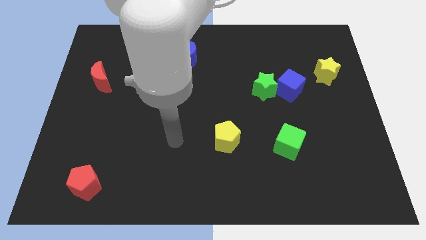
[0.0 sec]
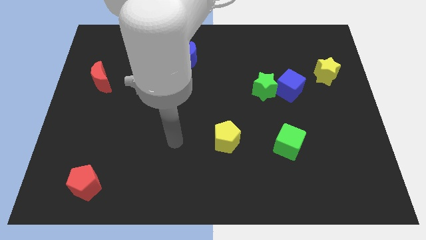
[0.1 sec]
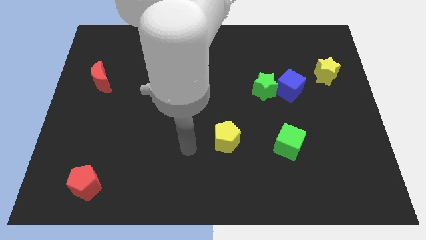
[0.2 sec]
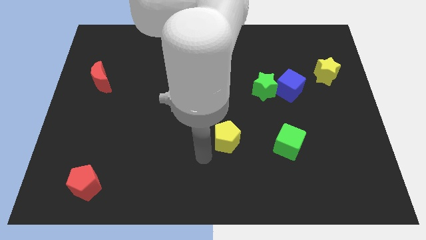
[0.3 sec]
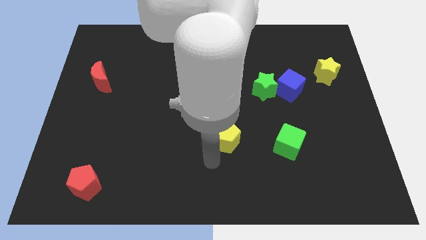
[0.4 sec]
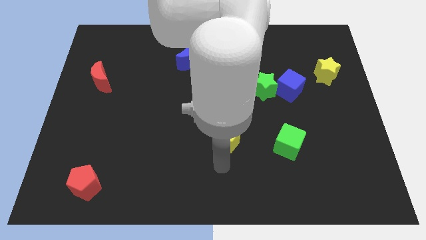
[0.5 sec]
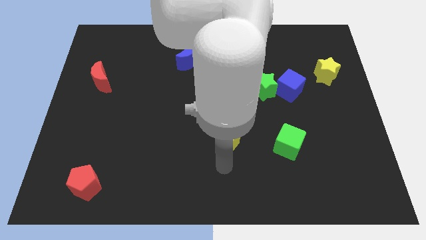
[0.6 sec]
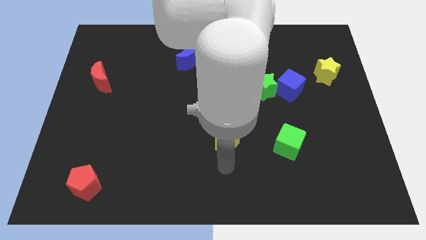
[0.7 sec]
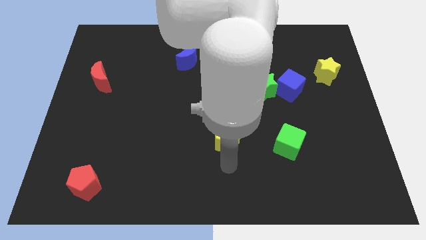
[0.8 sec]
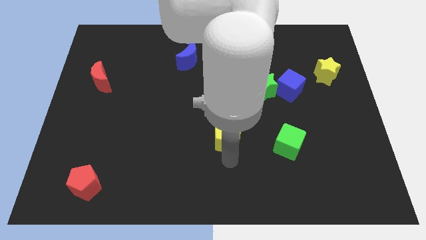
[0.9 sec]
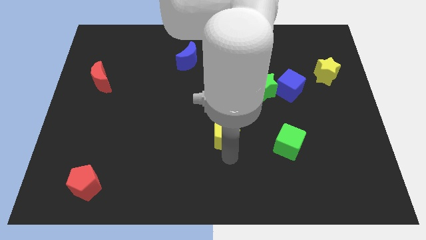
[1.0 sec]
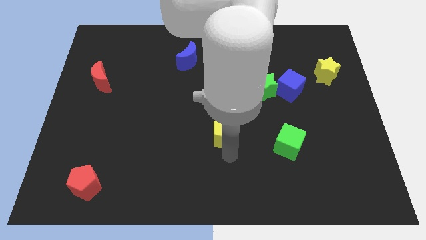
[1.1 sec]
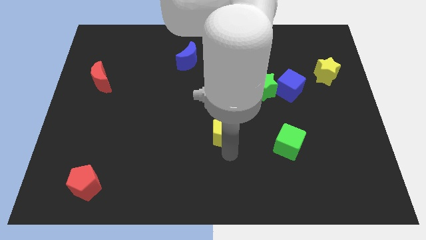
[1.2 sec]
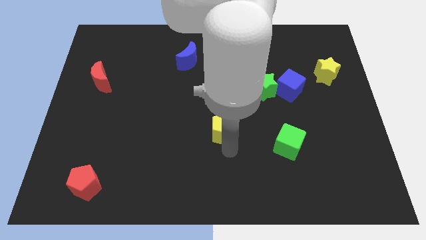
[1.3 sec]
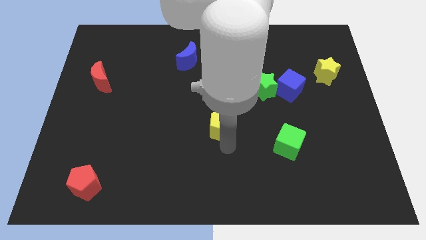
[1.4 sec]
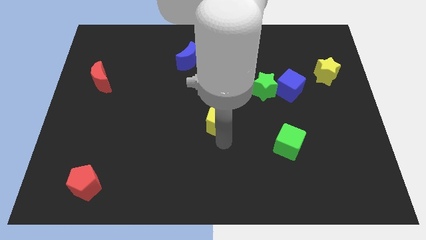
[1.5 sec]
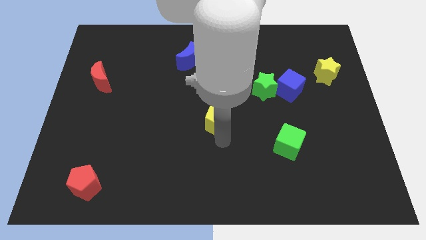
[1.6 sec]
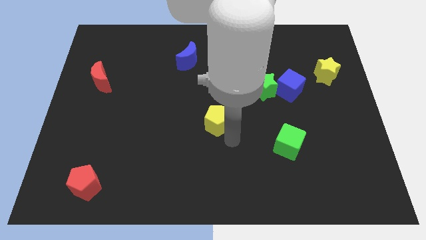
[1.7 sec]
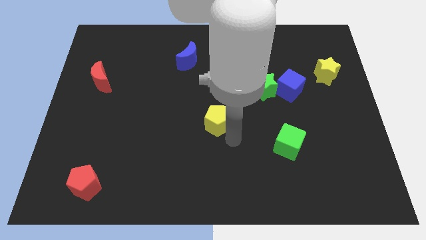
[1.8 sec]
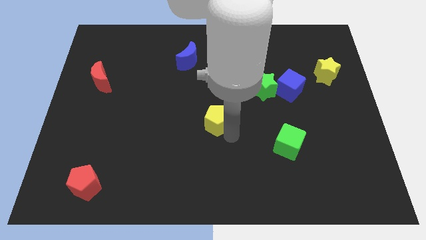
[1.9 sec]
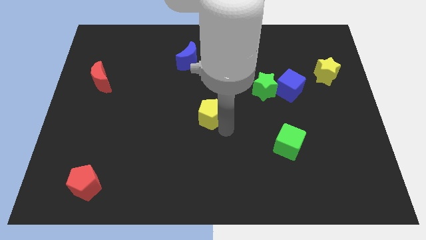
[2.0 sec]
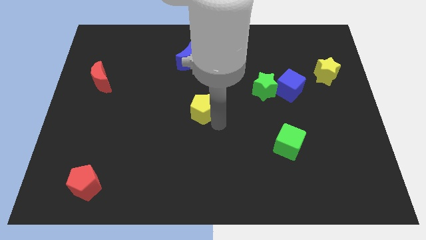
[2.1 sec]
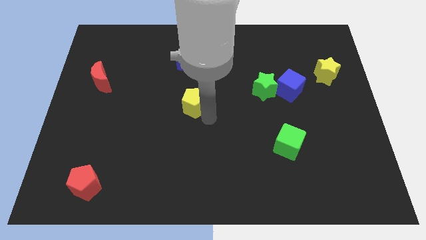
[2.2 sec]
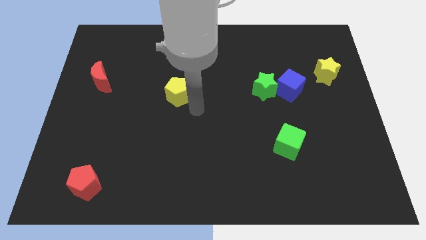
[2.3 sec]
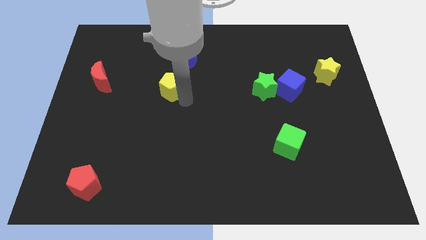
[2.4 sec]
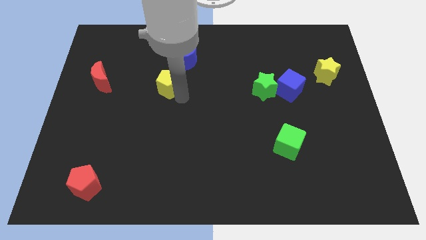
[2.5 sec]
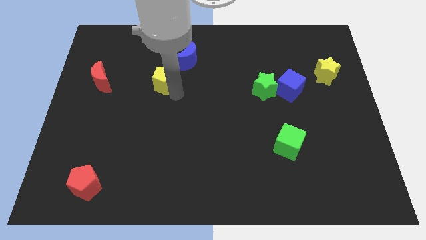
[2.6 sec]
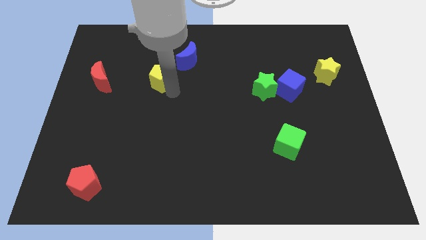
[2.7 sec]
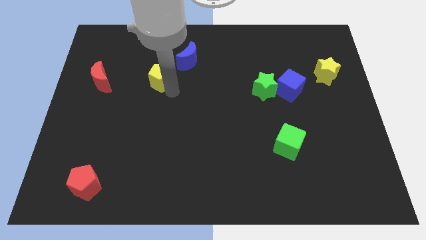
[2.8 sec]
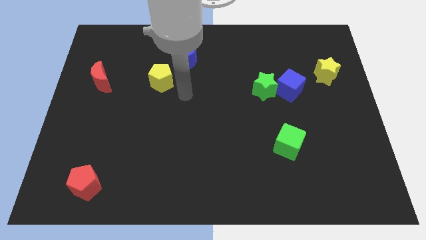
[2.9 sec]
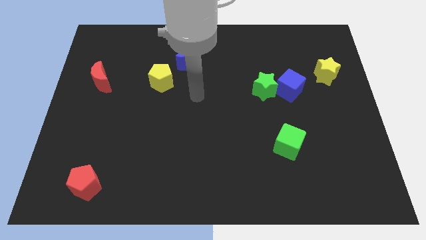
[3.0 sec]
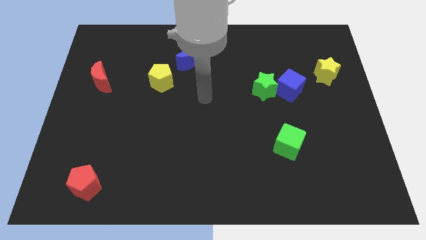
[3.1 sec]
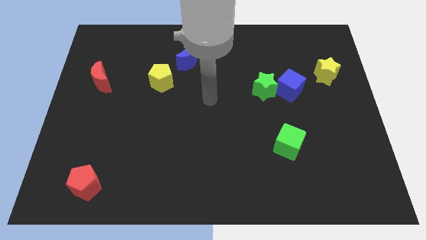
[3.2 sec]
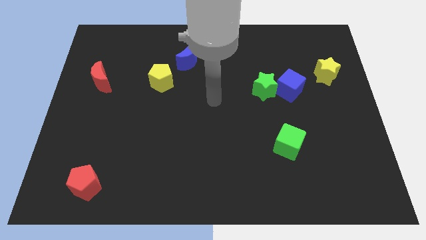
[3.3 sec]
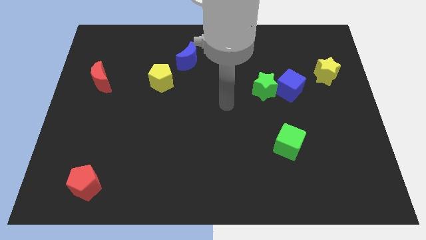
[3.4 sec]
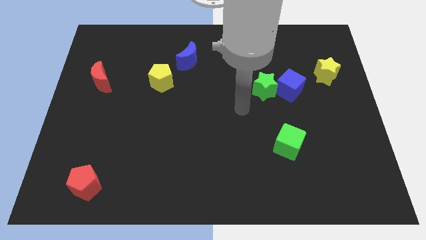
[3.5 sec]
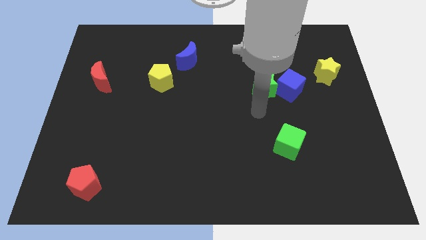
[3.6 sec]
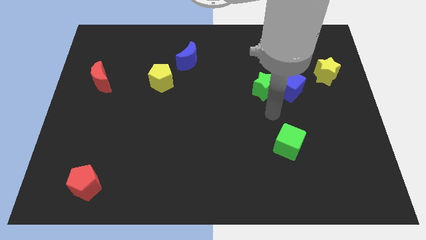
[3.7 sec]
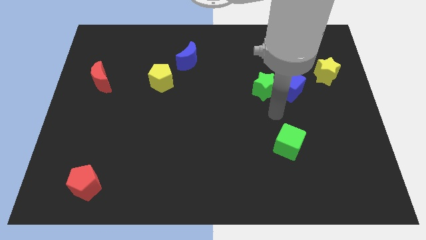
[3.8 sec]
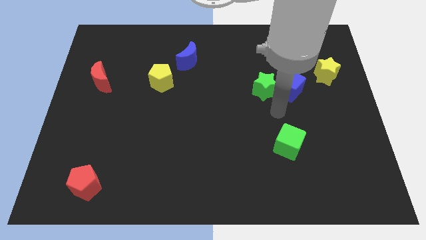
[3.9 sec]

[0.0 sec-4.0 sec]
push the yellow pentagon to the top

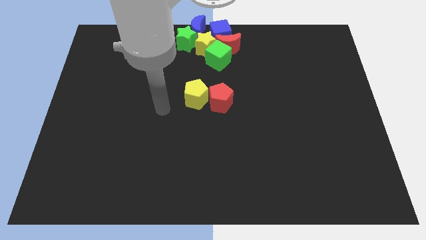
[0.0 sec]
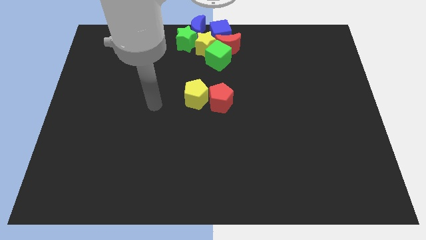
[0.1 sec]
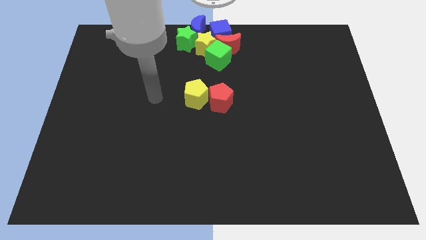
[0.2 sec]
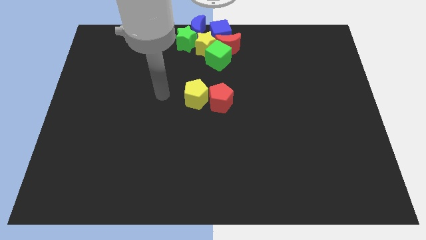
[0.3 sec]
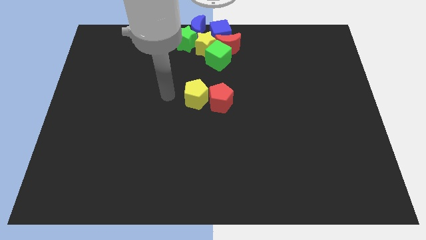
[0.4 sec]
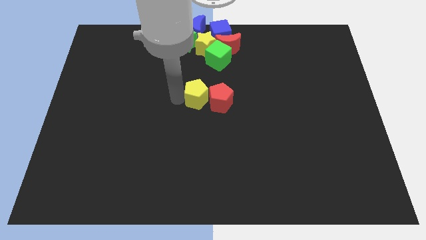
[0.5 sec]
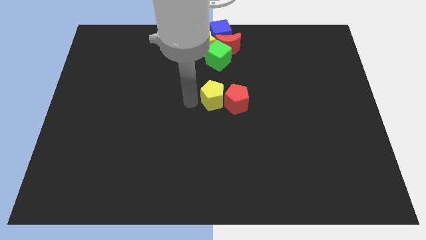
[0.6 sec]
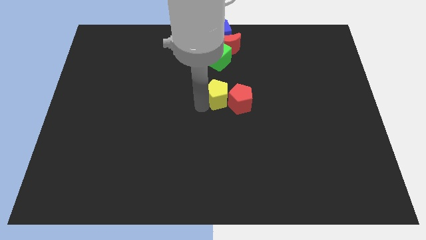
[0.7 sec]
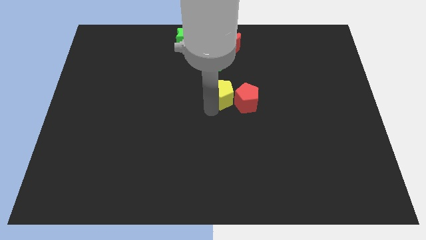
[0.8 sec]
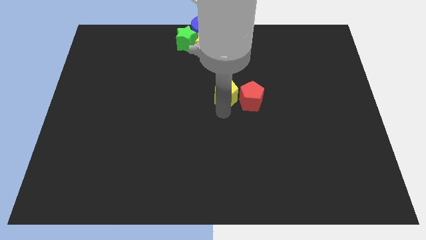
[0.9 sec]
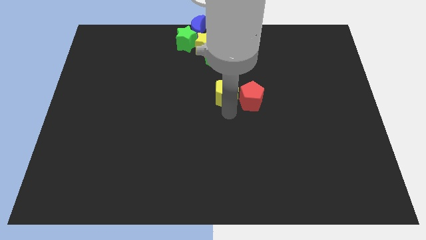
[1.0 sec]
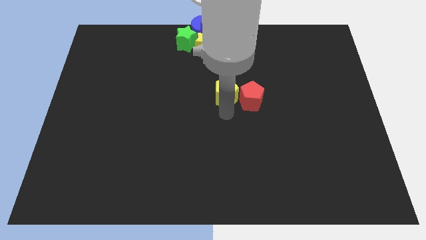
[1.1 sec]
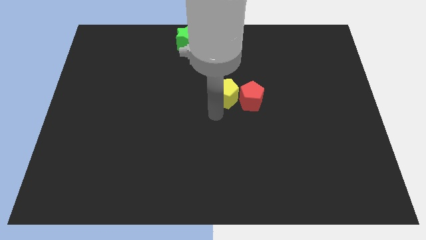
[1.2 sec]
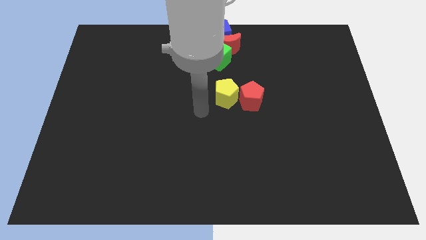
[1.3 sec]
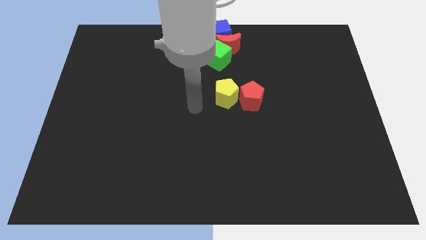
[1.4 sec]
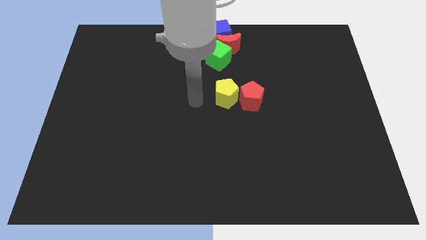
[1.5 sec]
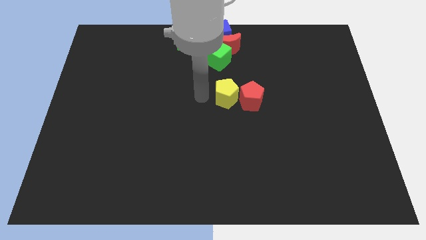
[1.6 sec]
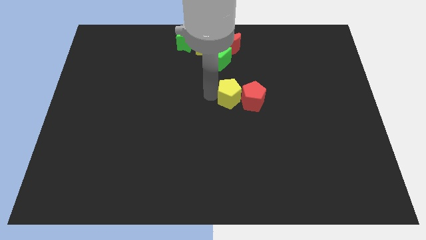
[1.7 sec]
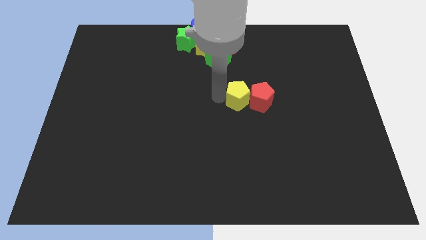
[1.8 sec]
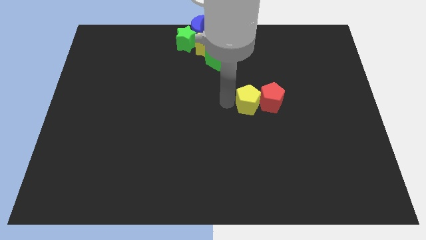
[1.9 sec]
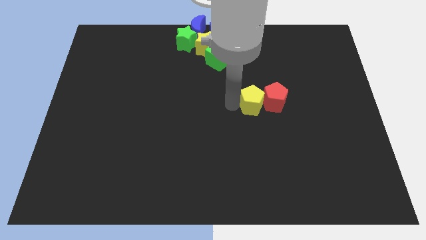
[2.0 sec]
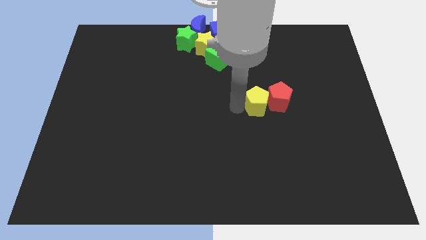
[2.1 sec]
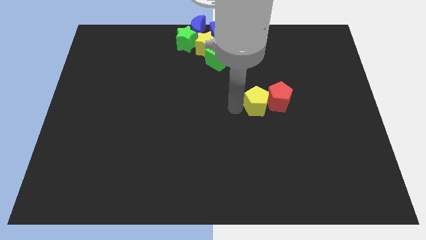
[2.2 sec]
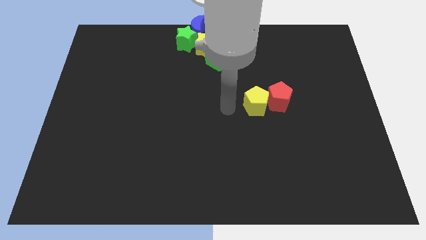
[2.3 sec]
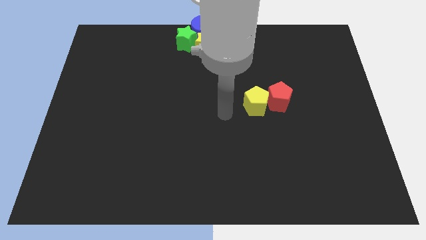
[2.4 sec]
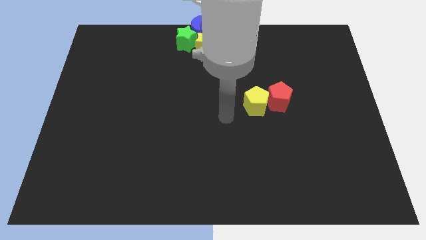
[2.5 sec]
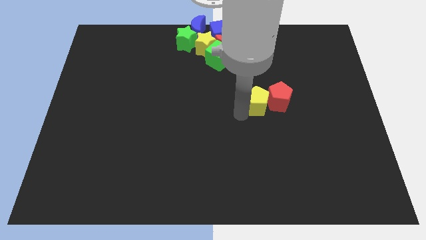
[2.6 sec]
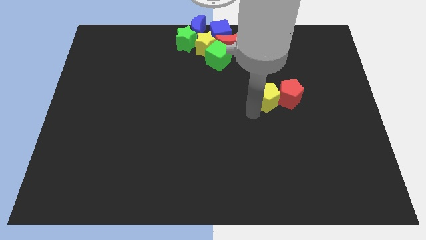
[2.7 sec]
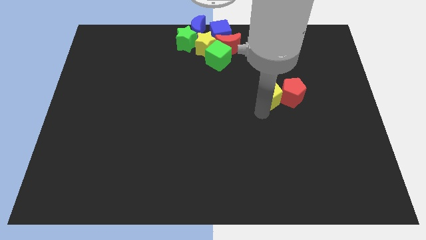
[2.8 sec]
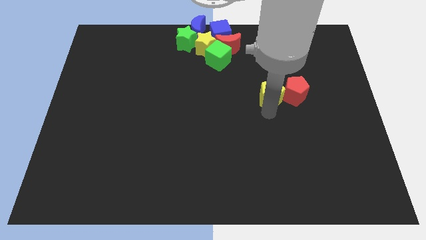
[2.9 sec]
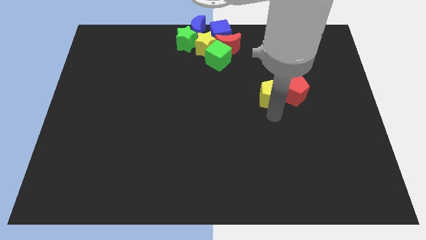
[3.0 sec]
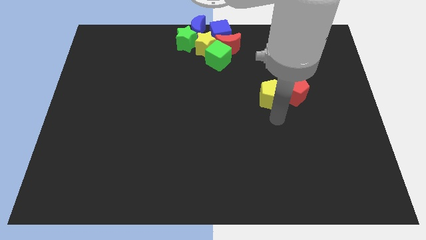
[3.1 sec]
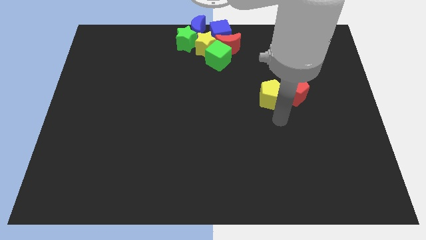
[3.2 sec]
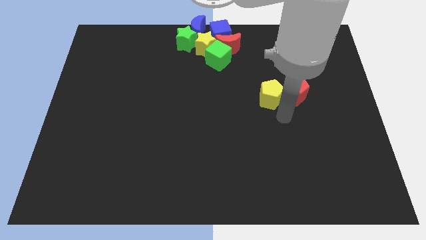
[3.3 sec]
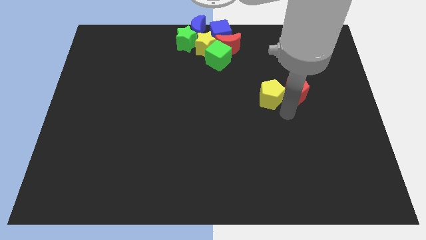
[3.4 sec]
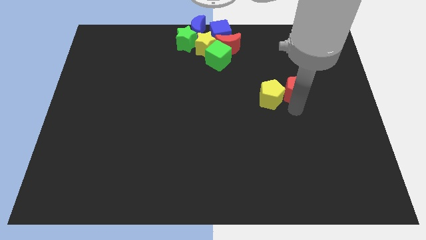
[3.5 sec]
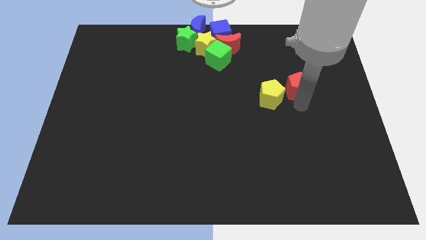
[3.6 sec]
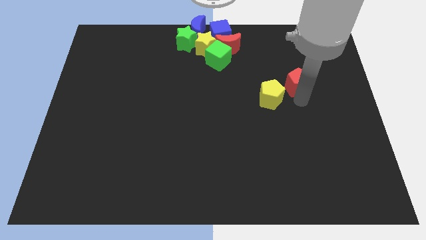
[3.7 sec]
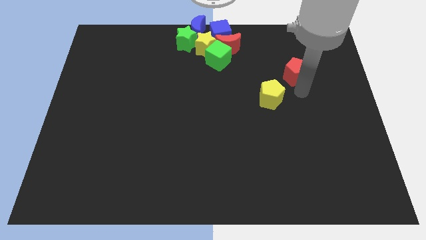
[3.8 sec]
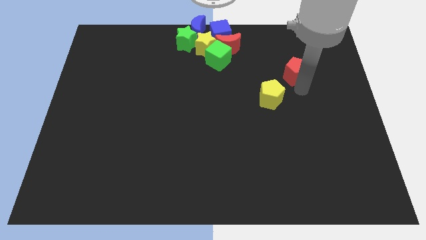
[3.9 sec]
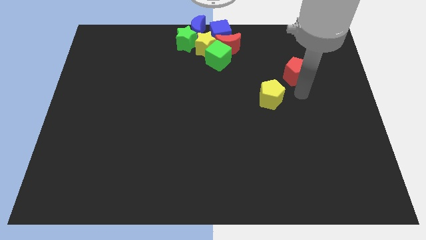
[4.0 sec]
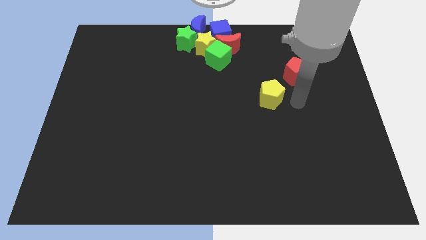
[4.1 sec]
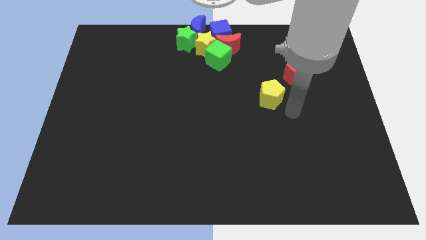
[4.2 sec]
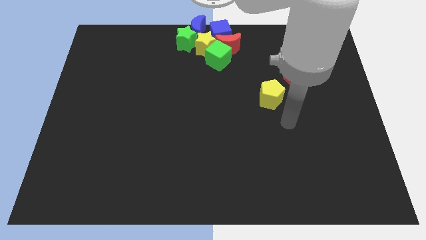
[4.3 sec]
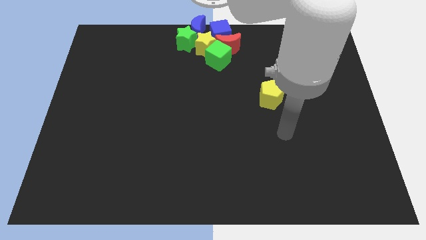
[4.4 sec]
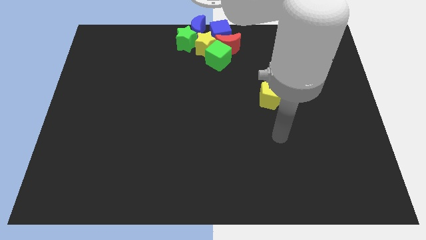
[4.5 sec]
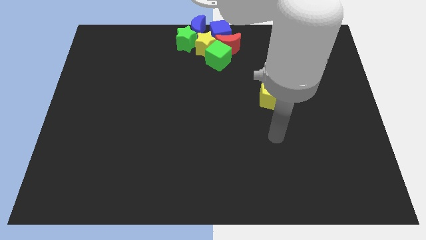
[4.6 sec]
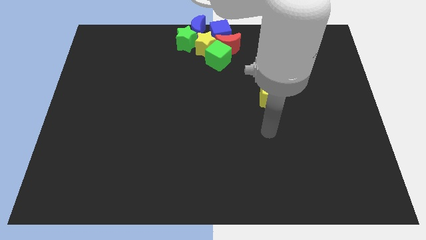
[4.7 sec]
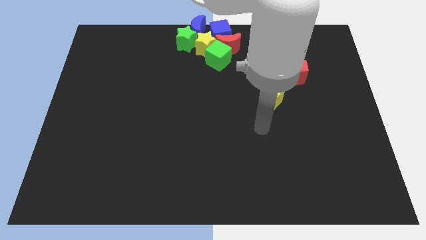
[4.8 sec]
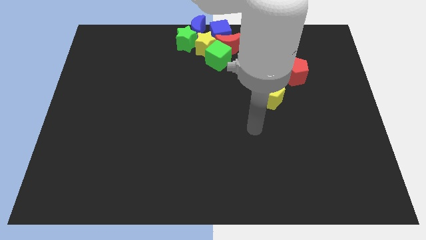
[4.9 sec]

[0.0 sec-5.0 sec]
push yellow pentagon along with red pentagon towards the group of objects
